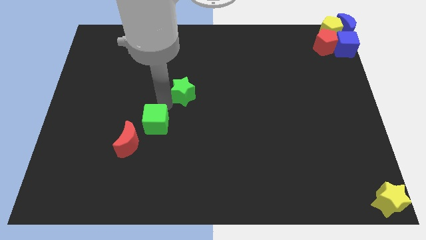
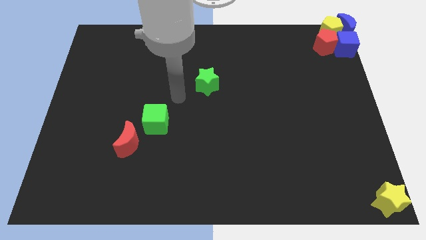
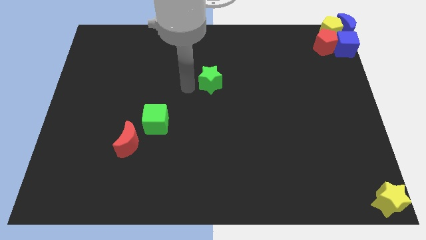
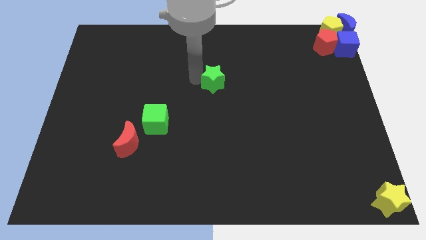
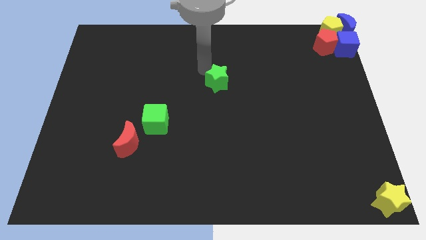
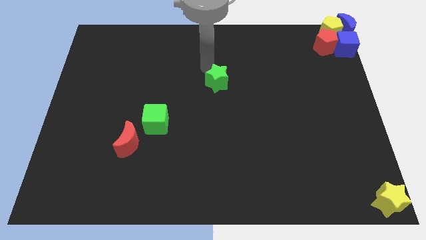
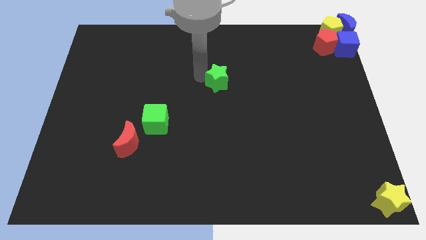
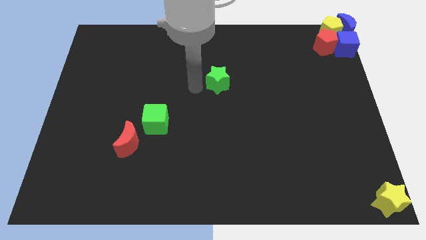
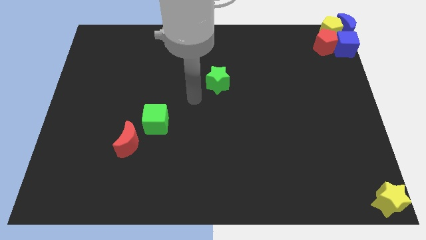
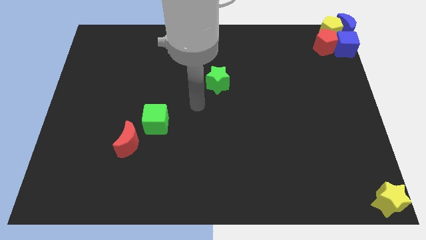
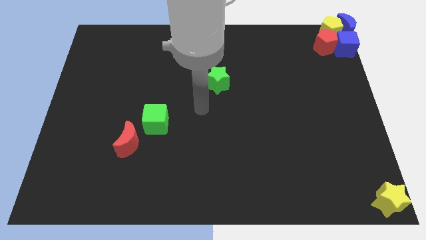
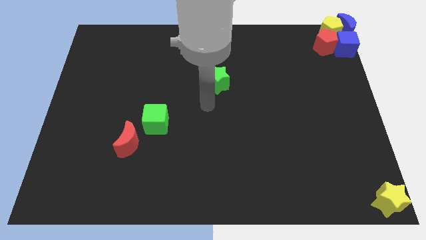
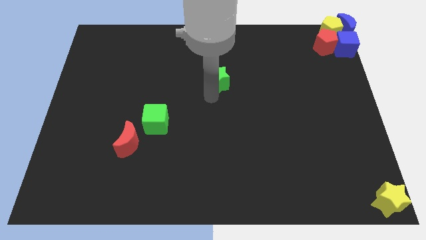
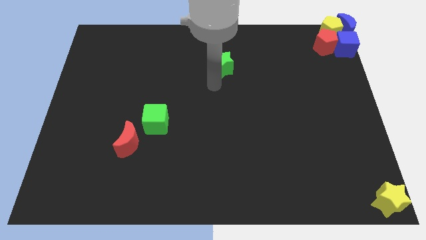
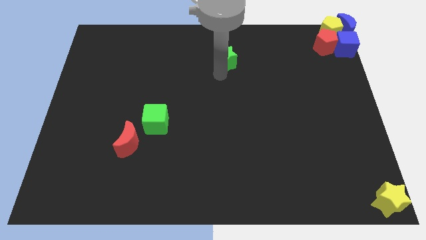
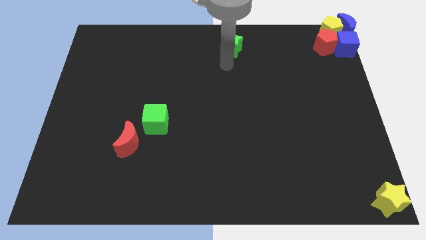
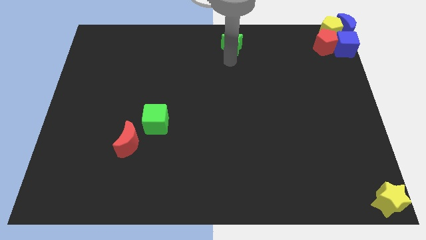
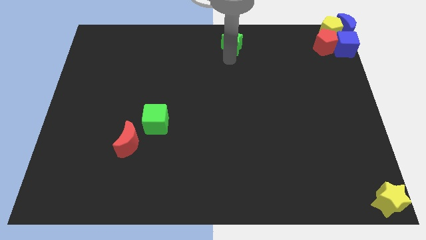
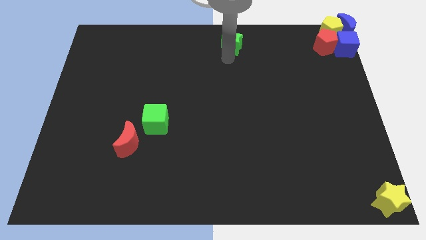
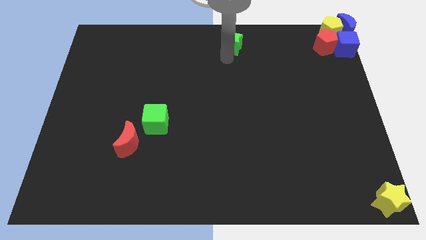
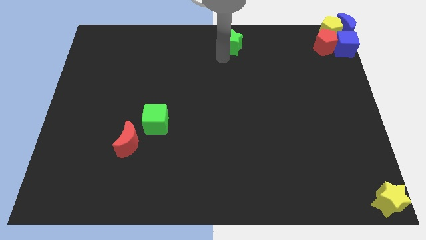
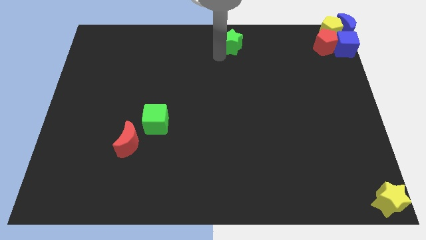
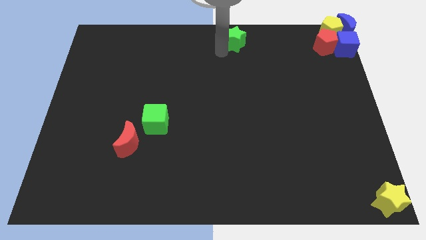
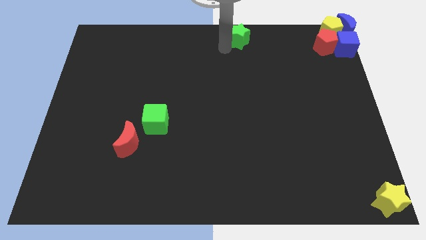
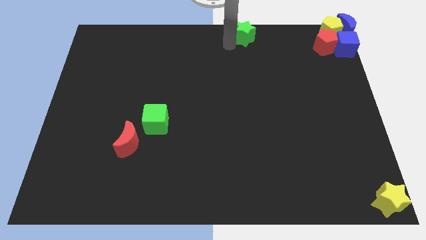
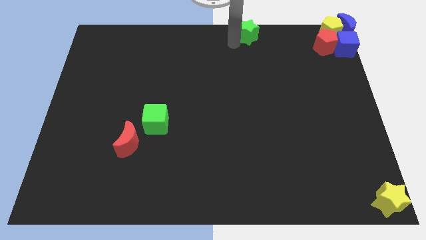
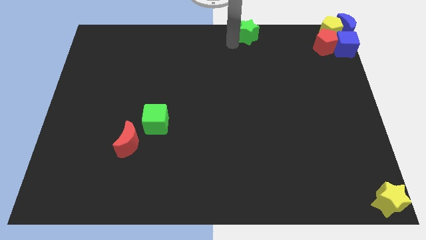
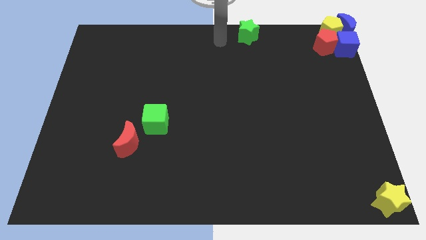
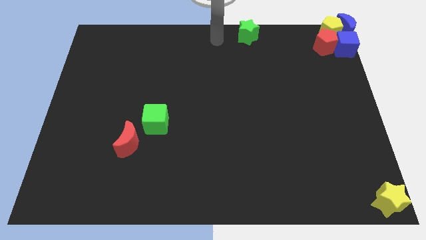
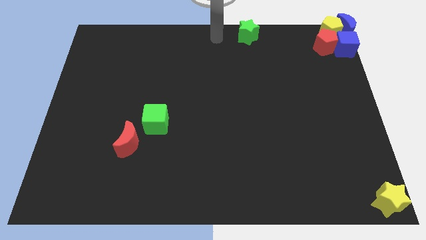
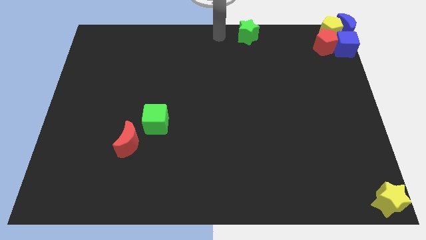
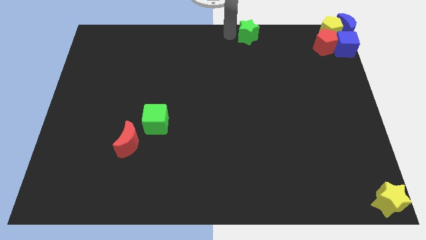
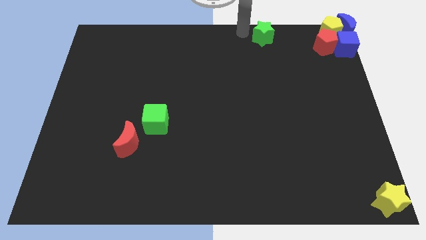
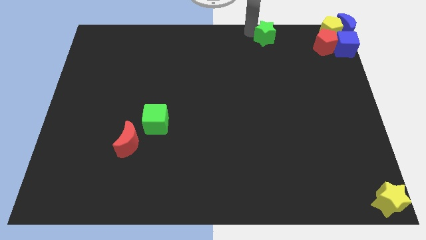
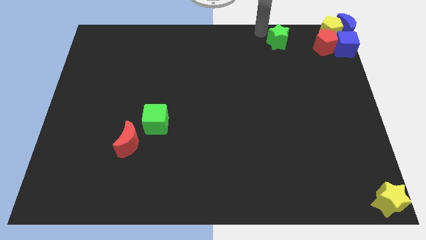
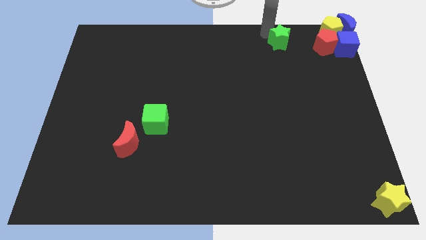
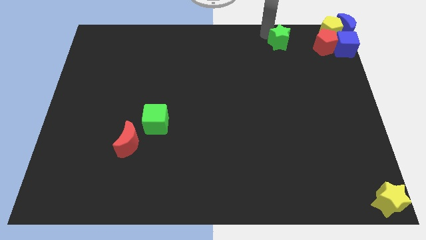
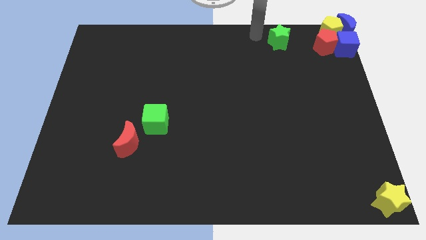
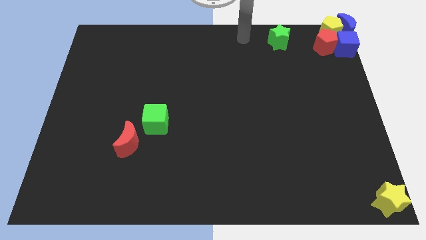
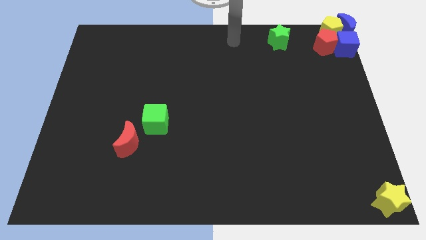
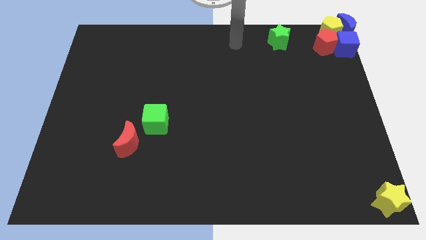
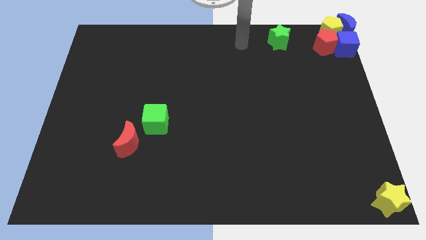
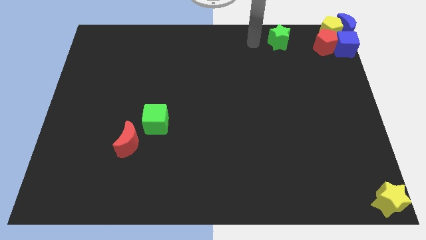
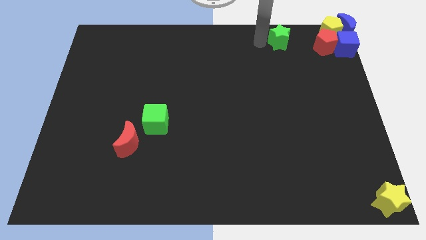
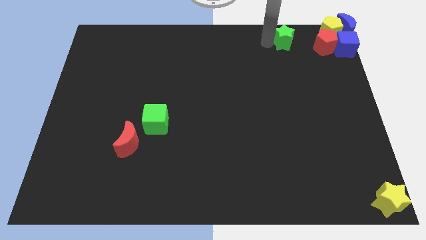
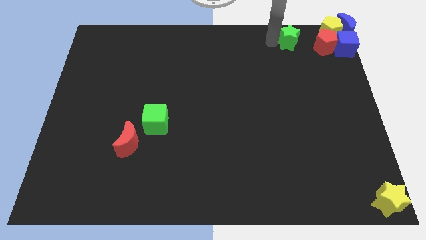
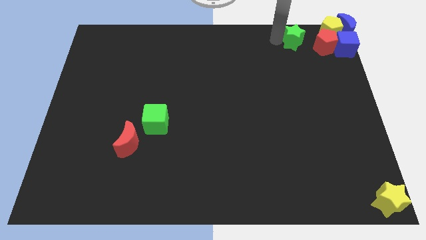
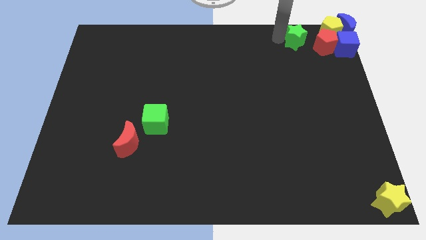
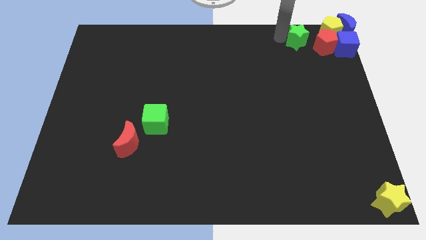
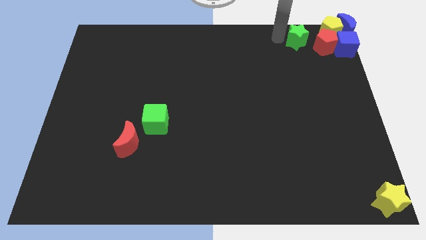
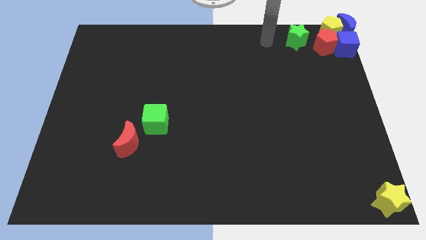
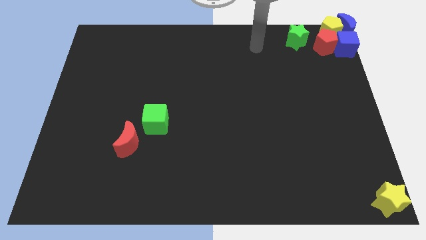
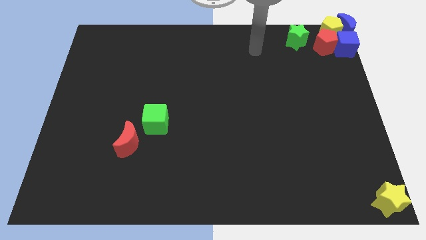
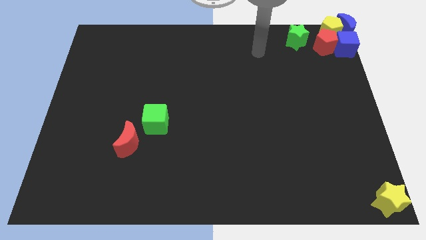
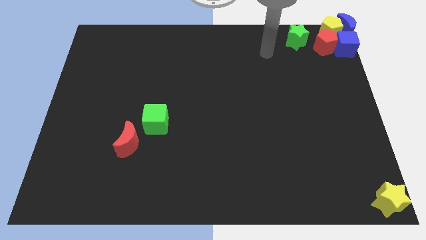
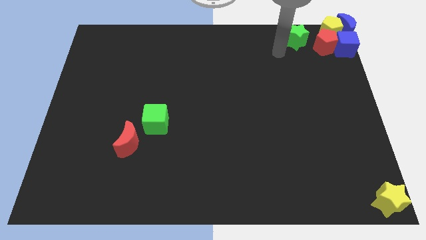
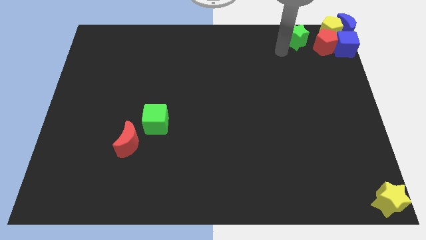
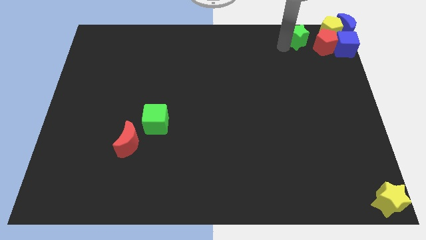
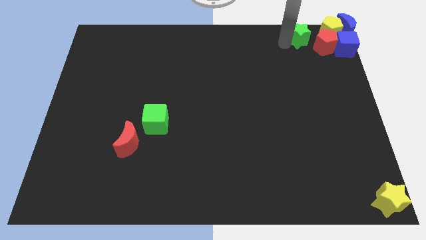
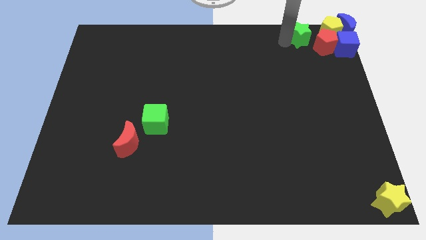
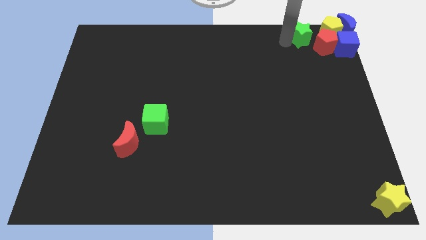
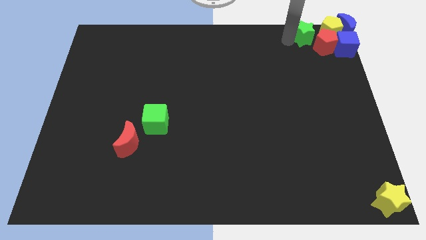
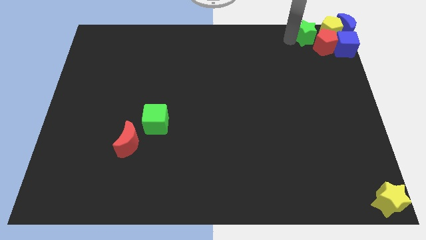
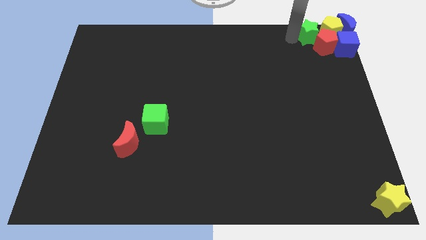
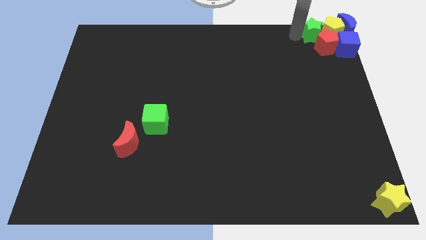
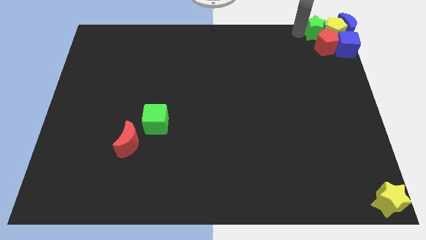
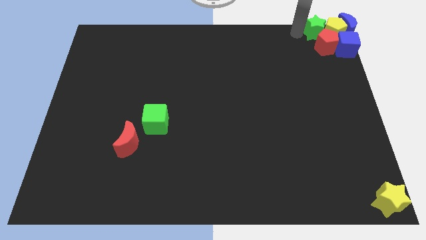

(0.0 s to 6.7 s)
push the green star into the yellow pentagon

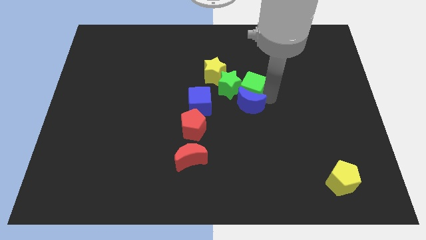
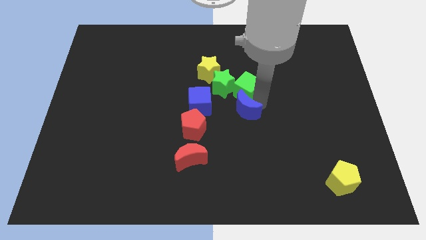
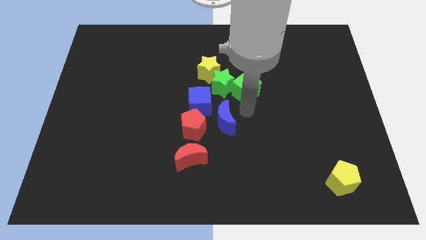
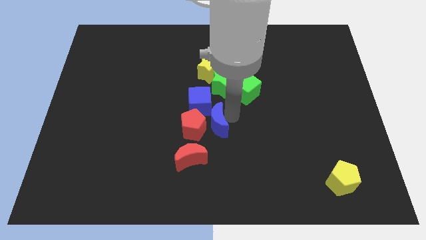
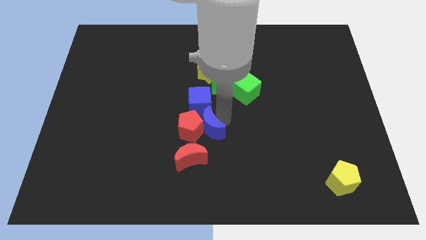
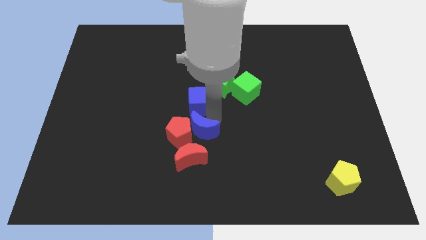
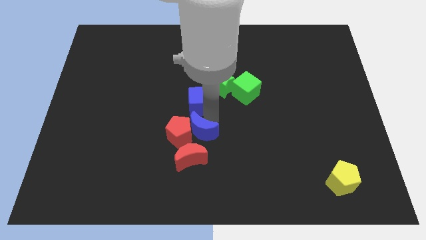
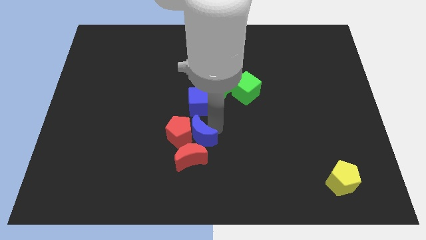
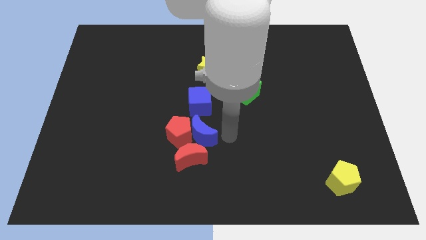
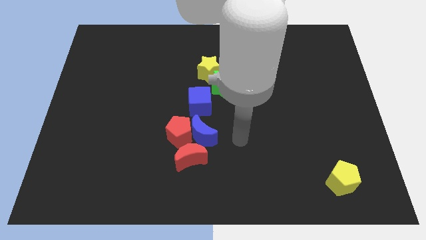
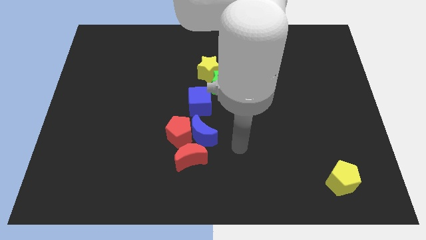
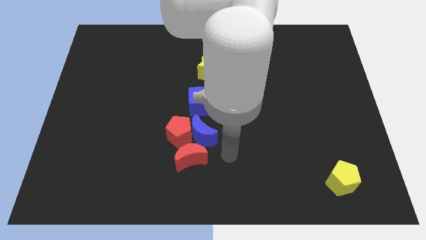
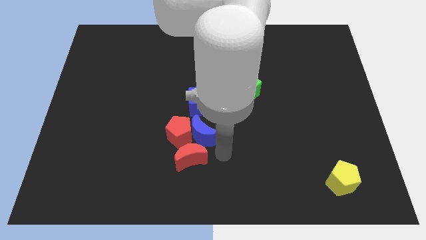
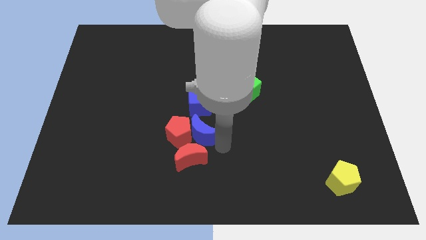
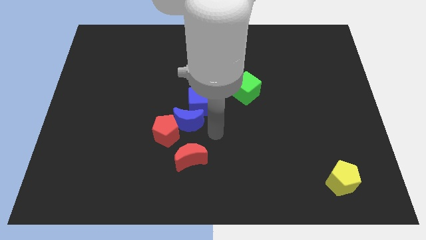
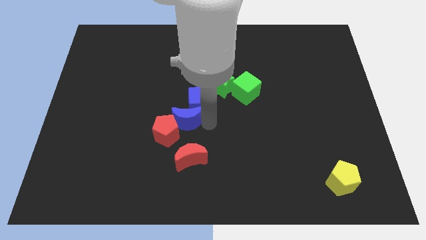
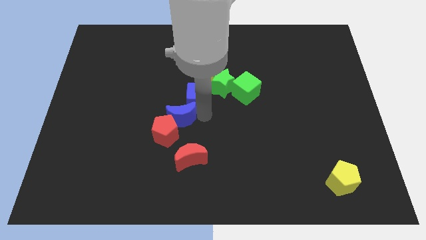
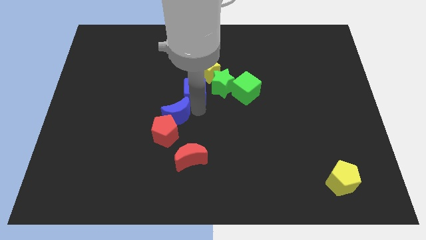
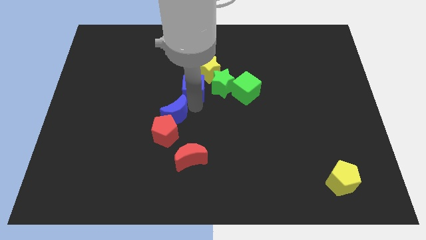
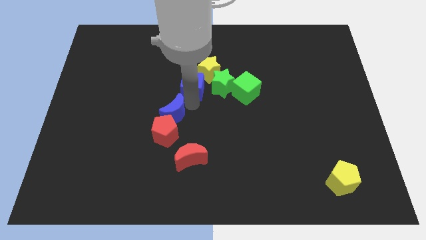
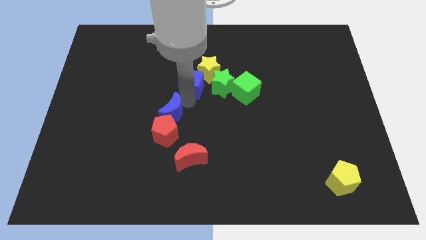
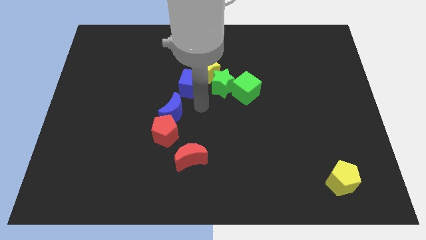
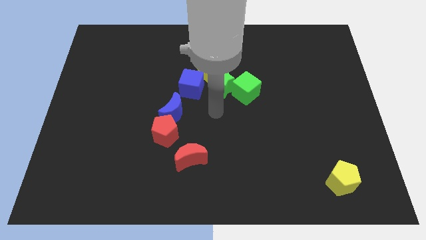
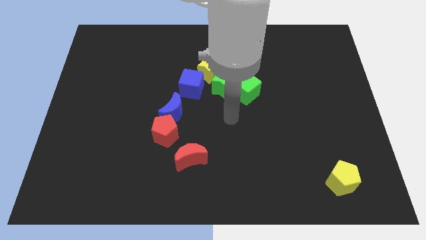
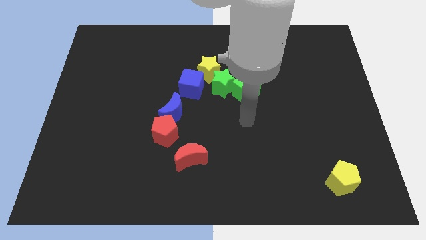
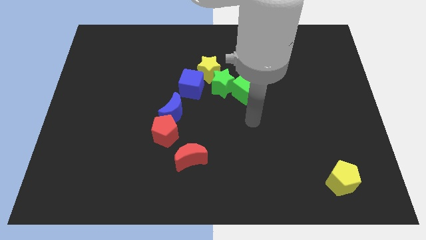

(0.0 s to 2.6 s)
move blue towards left of the board
